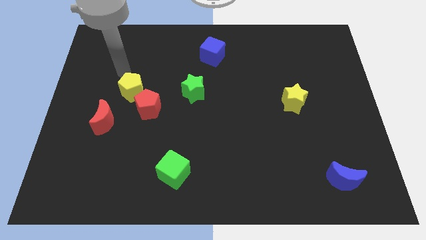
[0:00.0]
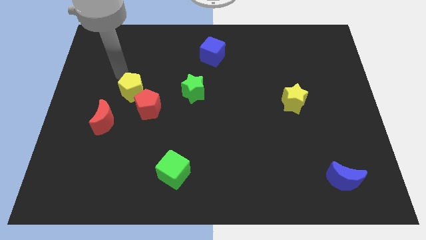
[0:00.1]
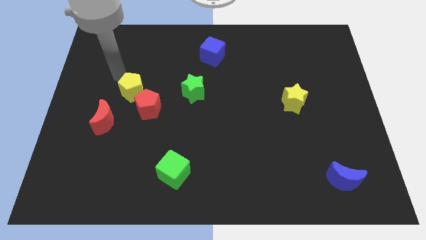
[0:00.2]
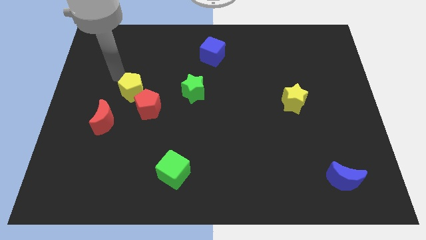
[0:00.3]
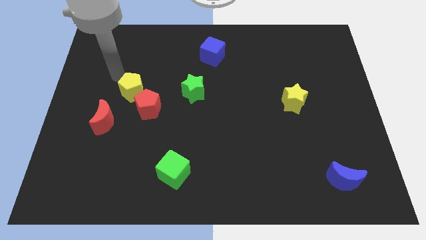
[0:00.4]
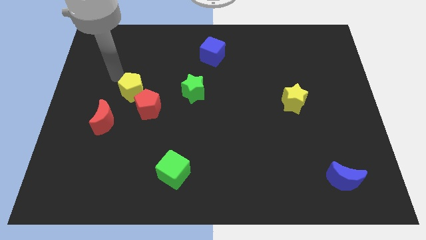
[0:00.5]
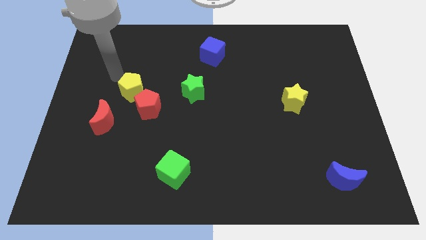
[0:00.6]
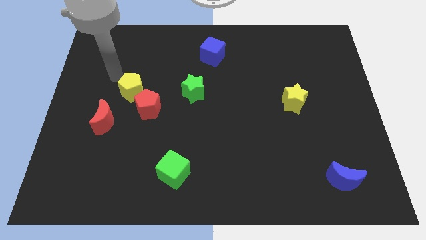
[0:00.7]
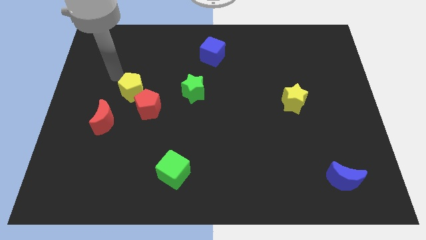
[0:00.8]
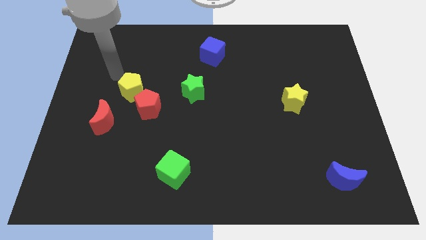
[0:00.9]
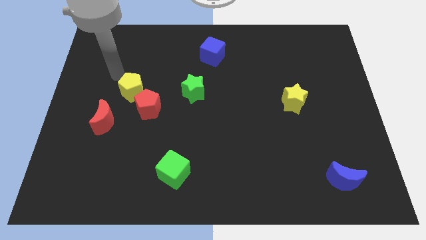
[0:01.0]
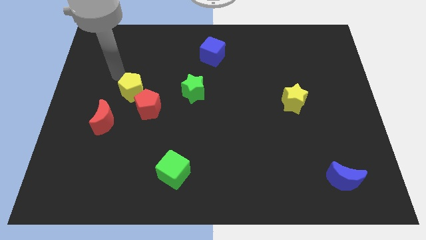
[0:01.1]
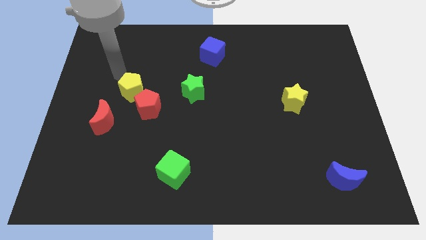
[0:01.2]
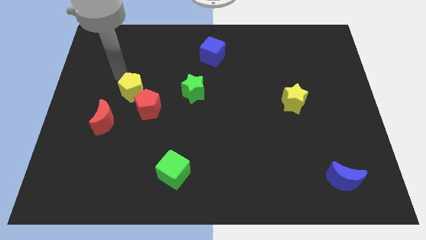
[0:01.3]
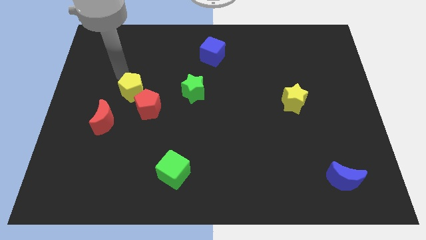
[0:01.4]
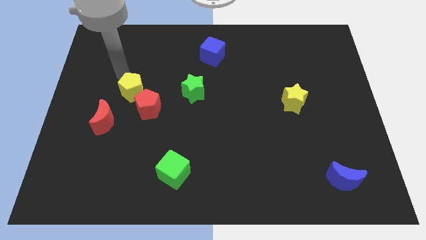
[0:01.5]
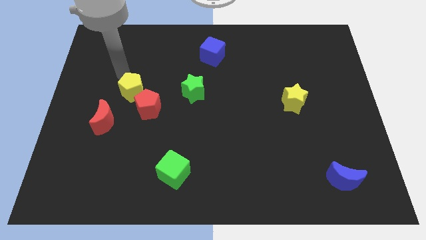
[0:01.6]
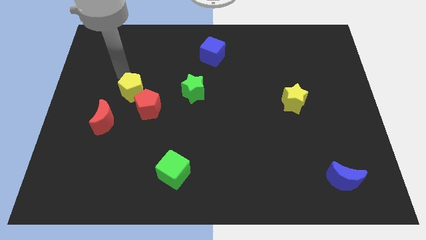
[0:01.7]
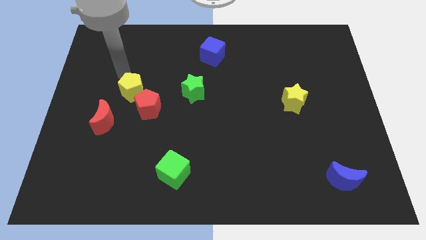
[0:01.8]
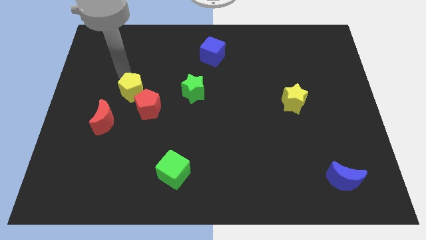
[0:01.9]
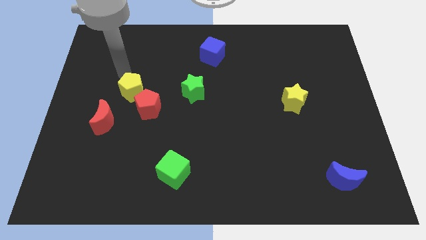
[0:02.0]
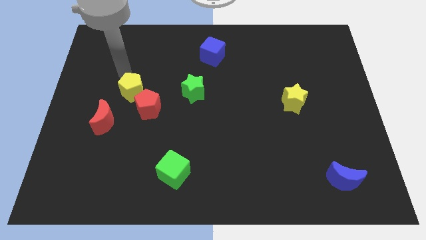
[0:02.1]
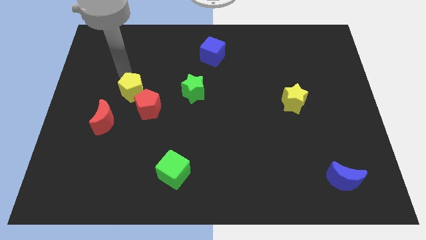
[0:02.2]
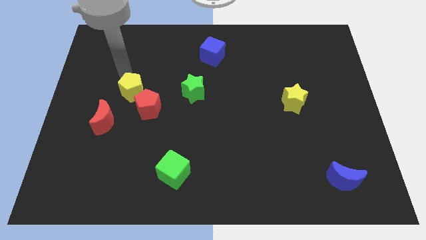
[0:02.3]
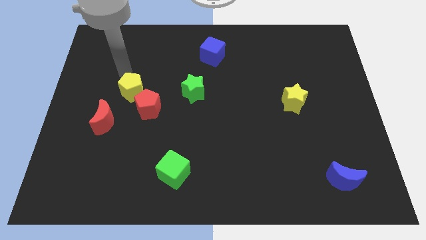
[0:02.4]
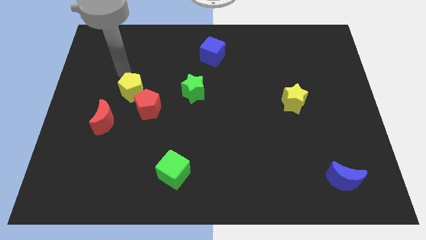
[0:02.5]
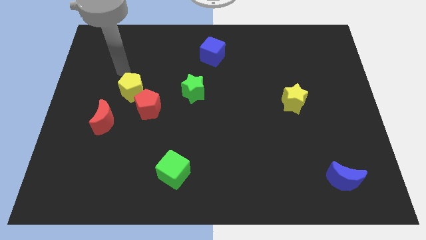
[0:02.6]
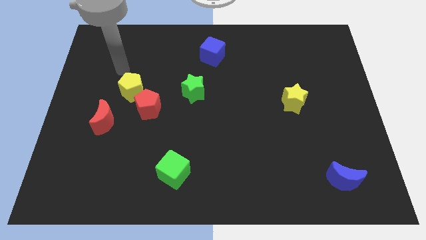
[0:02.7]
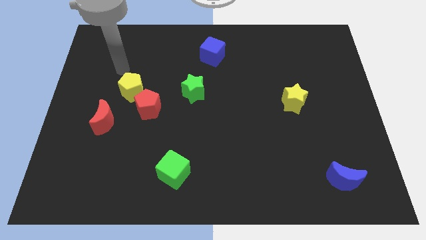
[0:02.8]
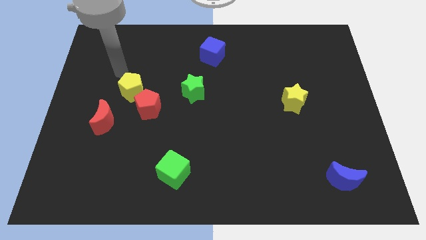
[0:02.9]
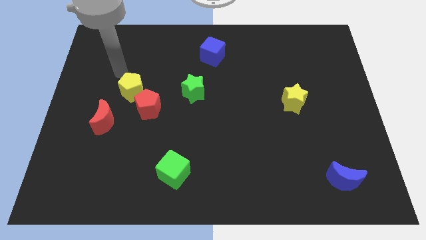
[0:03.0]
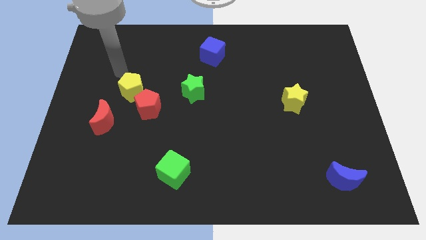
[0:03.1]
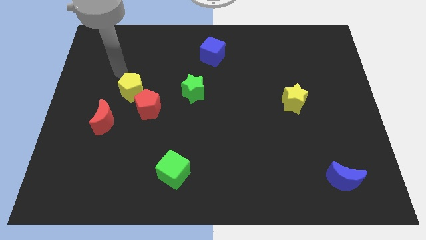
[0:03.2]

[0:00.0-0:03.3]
move the arm on top of the yellow pentagon diagonally

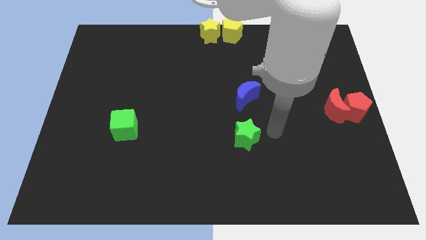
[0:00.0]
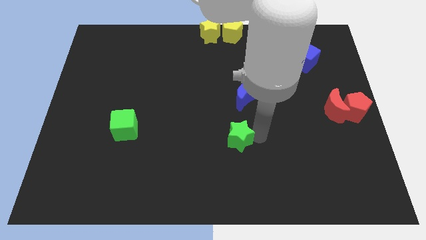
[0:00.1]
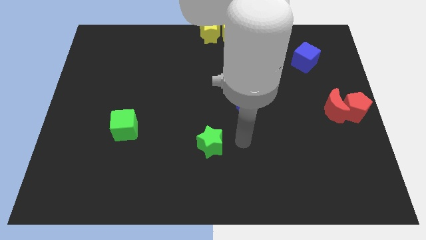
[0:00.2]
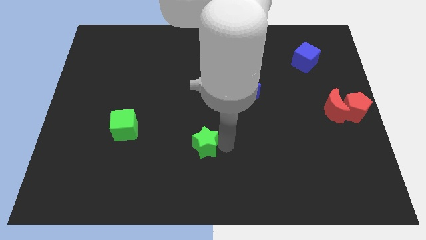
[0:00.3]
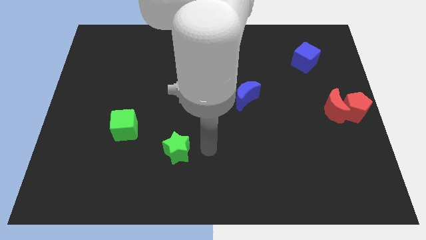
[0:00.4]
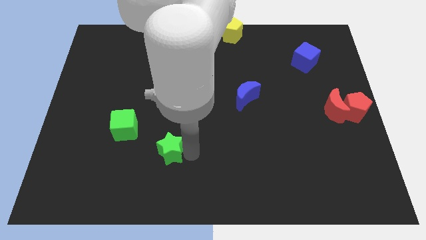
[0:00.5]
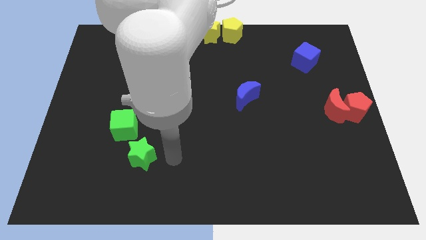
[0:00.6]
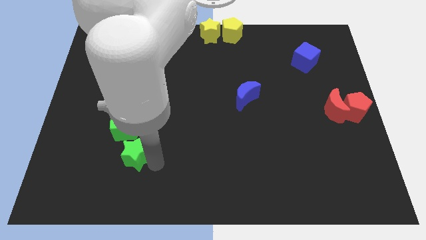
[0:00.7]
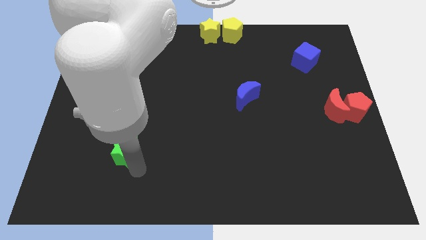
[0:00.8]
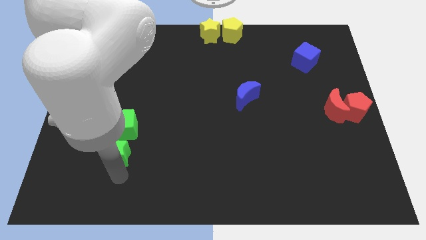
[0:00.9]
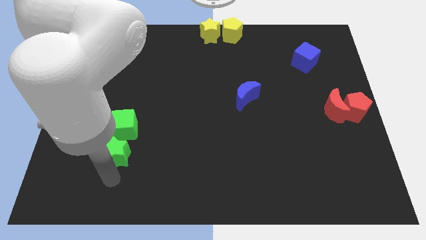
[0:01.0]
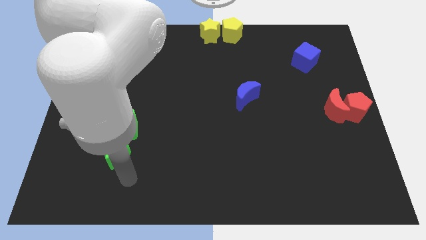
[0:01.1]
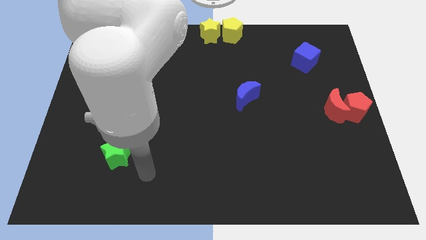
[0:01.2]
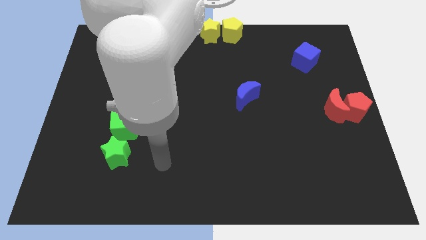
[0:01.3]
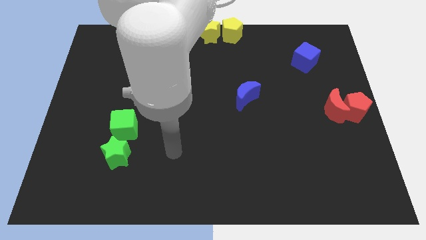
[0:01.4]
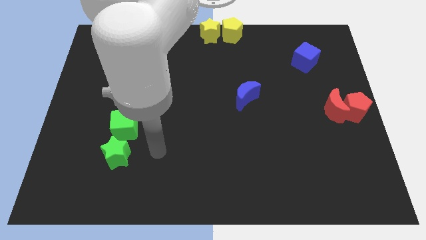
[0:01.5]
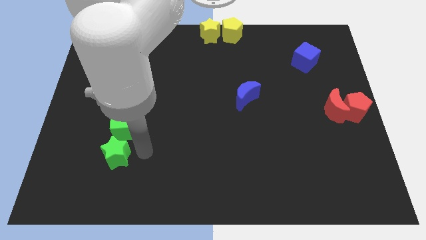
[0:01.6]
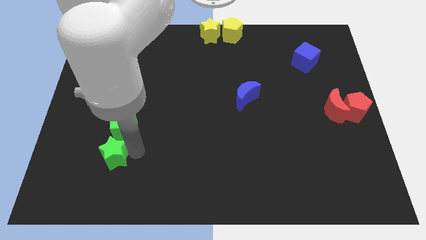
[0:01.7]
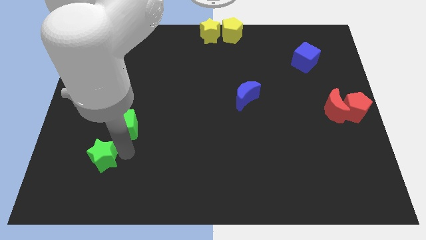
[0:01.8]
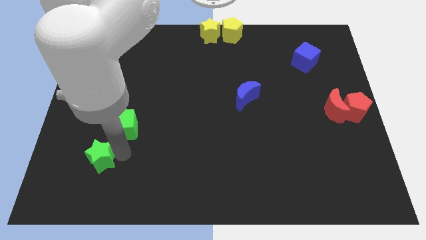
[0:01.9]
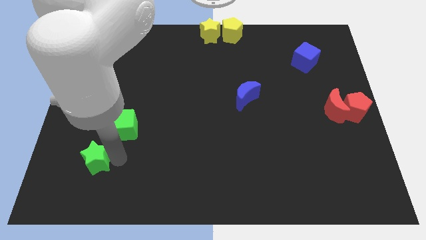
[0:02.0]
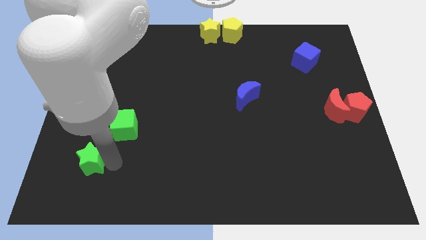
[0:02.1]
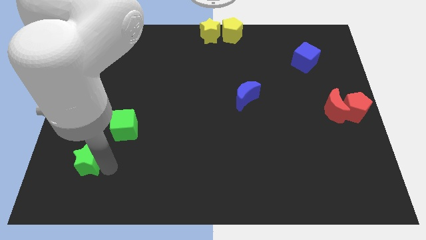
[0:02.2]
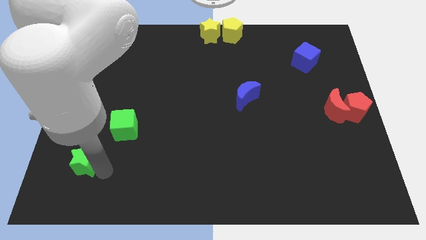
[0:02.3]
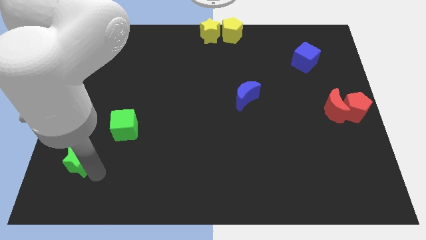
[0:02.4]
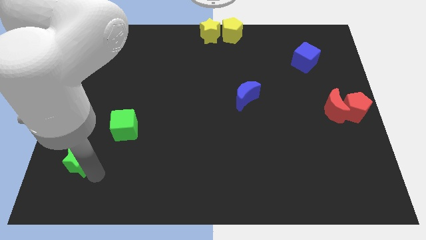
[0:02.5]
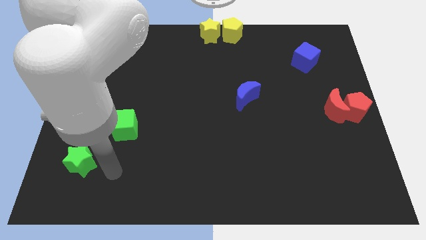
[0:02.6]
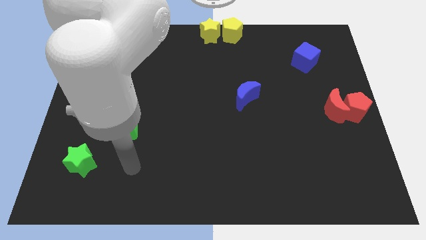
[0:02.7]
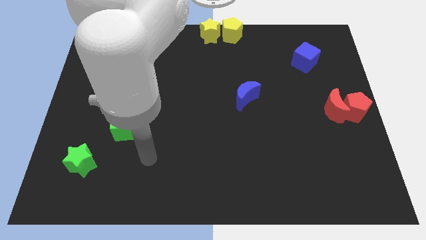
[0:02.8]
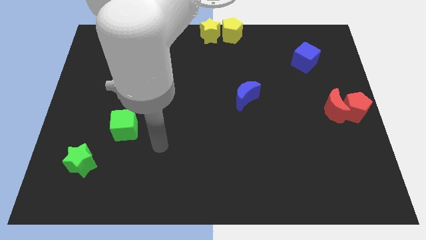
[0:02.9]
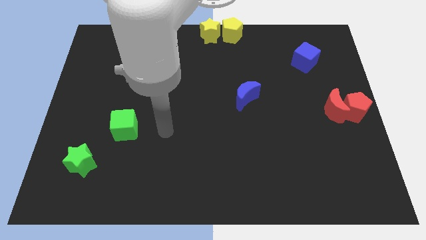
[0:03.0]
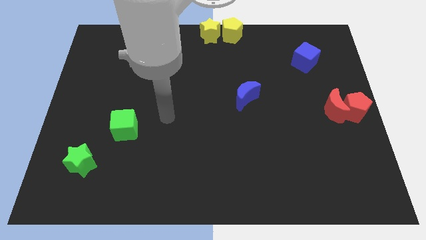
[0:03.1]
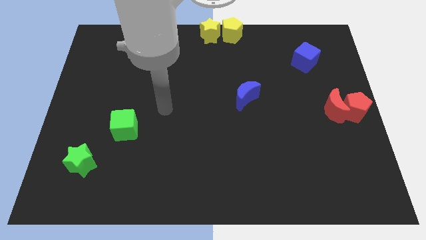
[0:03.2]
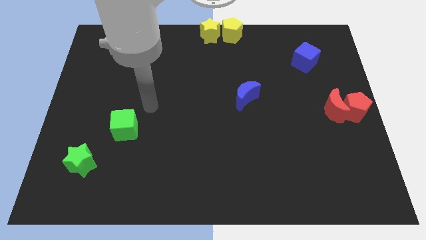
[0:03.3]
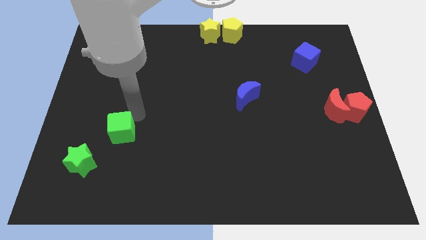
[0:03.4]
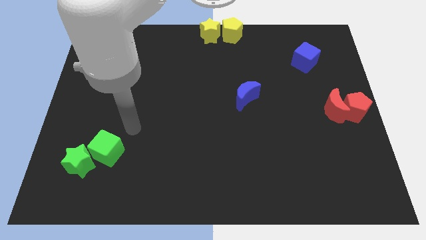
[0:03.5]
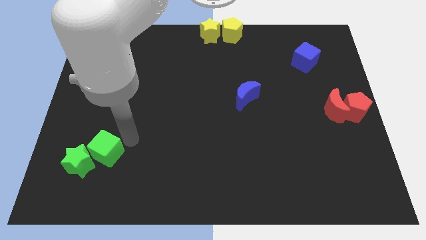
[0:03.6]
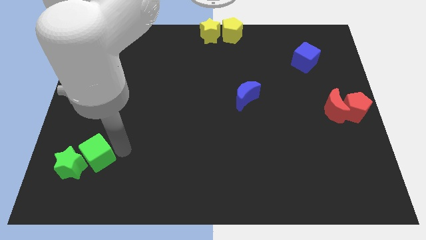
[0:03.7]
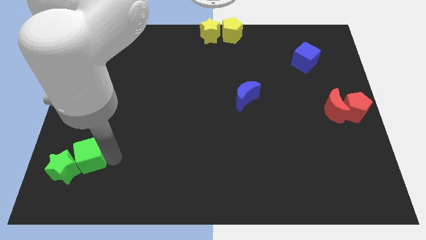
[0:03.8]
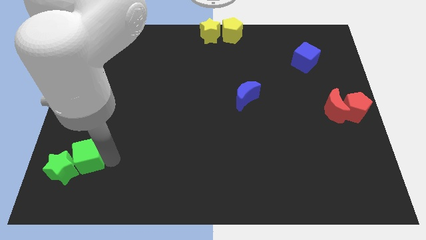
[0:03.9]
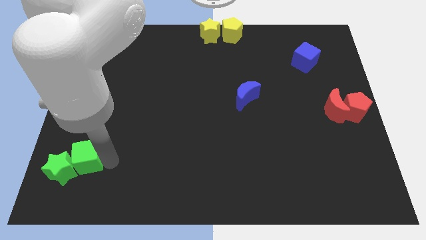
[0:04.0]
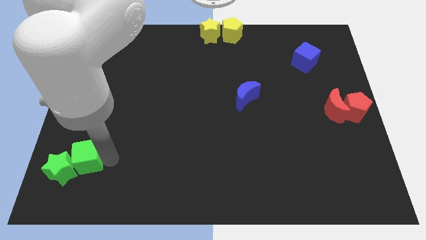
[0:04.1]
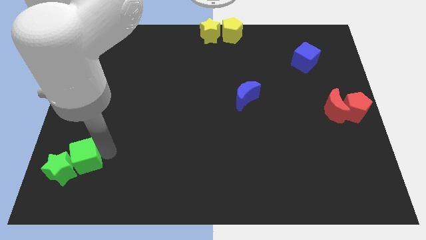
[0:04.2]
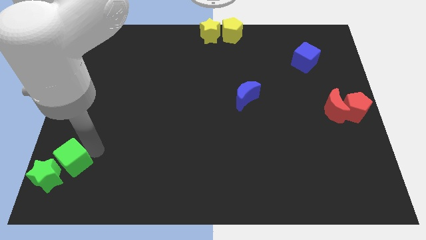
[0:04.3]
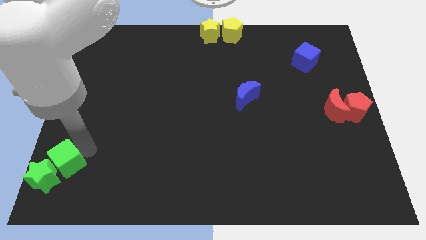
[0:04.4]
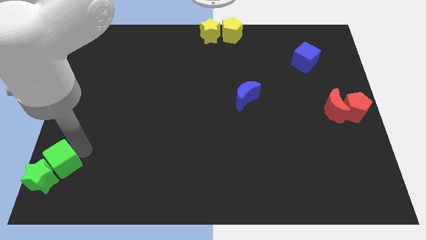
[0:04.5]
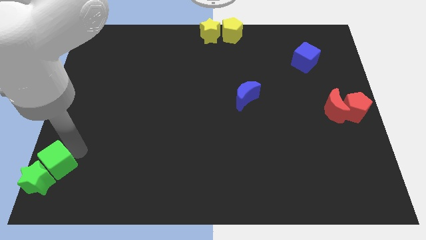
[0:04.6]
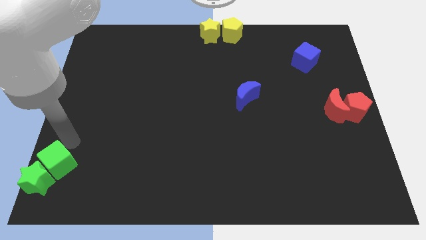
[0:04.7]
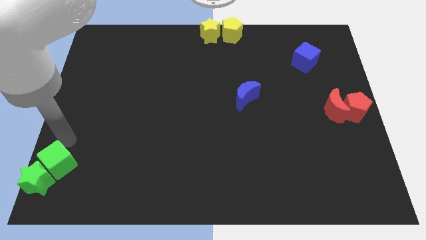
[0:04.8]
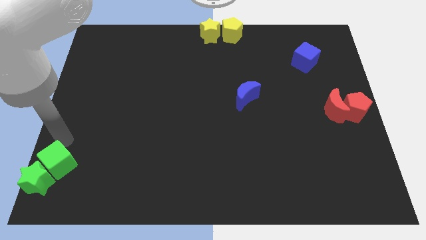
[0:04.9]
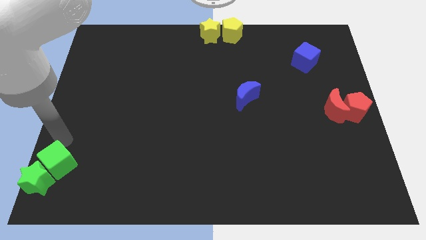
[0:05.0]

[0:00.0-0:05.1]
push the green cube and green star to bottom left

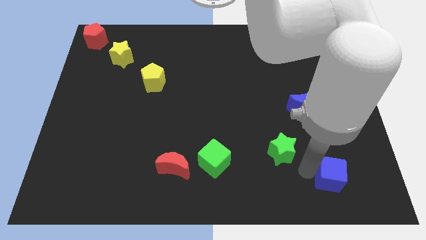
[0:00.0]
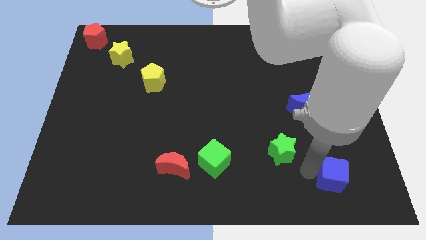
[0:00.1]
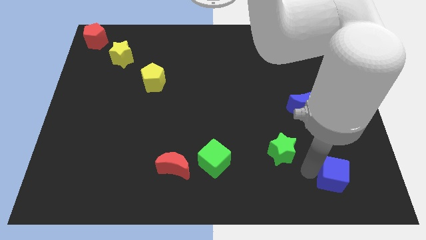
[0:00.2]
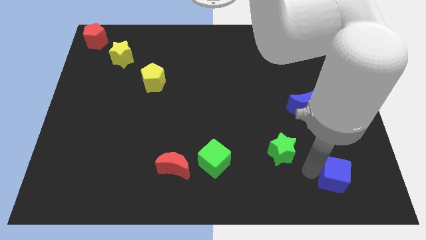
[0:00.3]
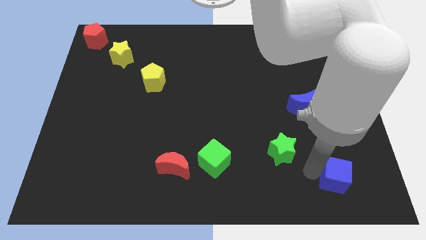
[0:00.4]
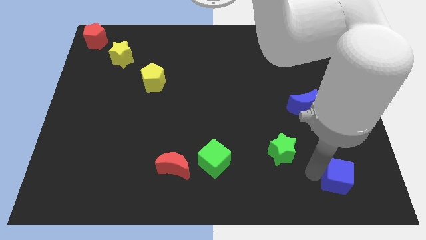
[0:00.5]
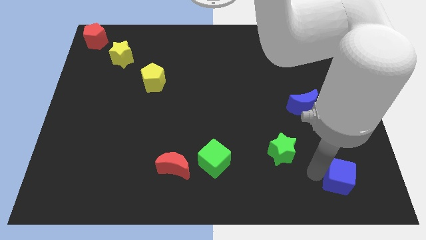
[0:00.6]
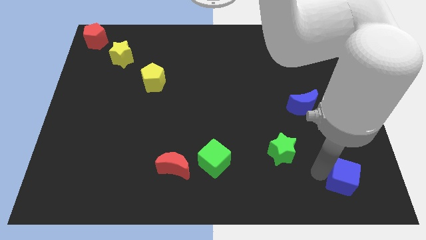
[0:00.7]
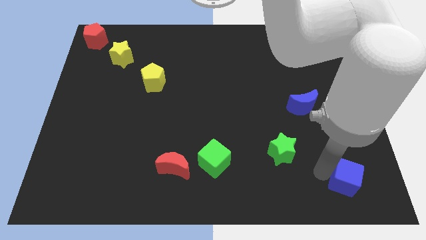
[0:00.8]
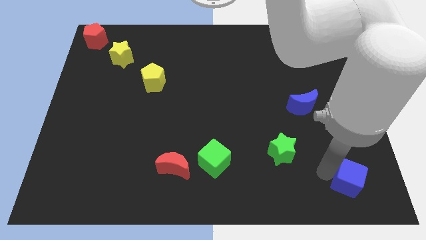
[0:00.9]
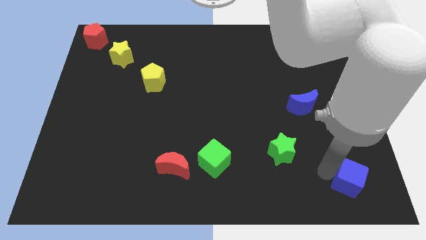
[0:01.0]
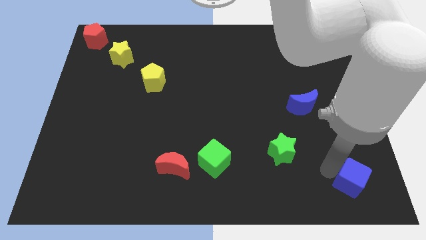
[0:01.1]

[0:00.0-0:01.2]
move the blue cube to the bottom right corner
